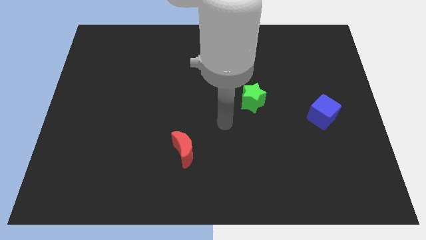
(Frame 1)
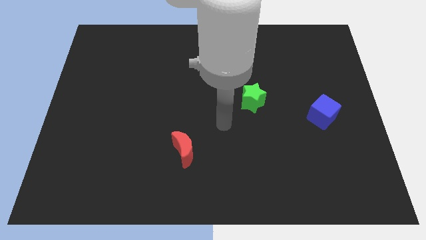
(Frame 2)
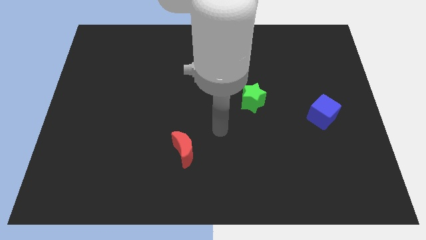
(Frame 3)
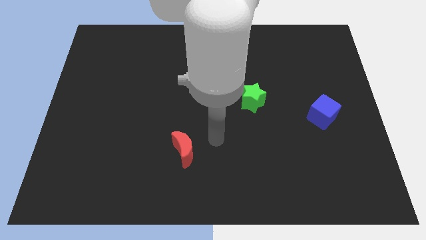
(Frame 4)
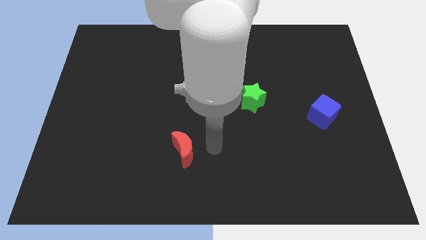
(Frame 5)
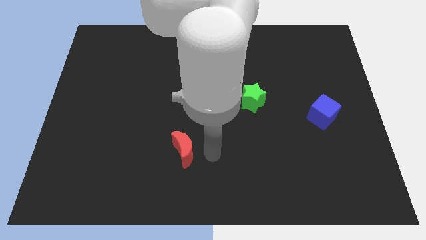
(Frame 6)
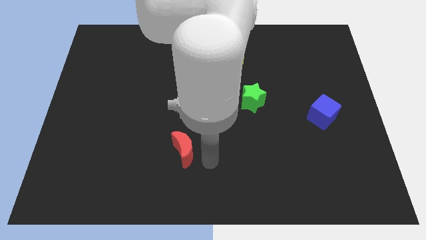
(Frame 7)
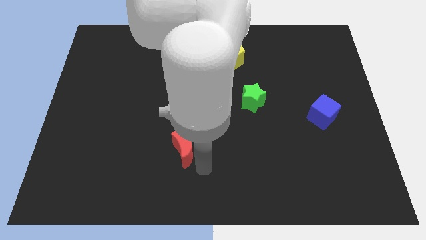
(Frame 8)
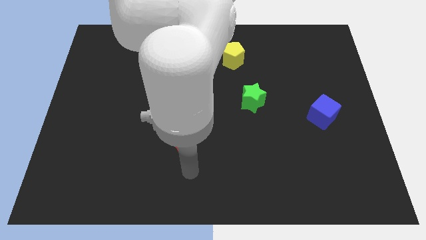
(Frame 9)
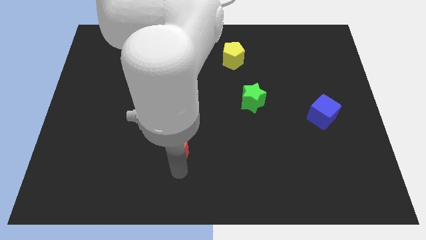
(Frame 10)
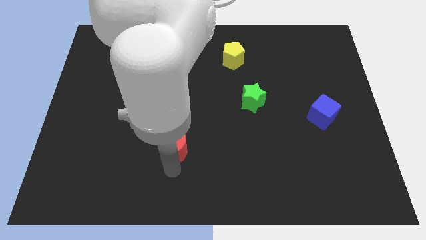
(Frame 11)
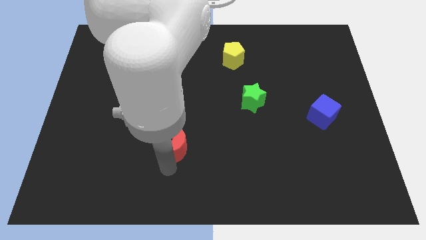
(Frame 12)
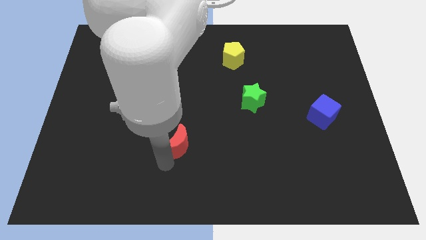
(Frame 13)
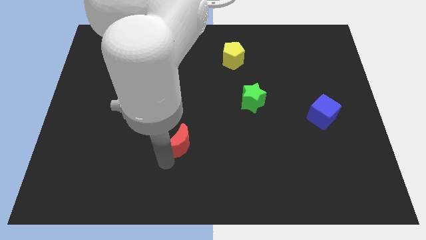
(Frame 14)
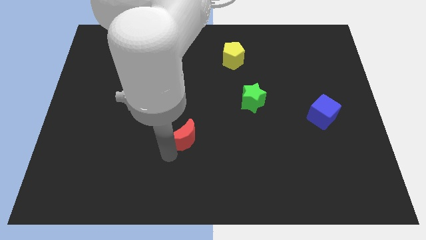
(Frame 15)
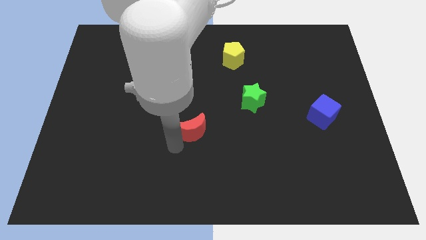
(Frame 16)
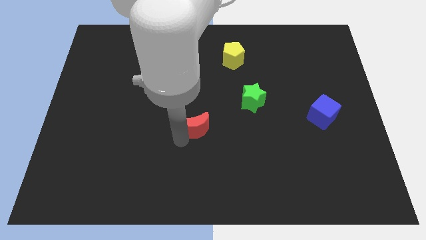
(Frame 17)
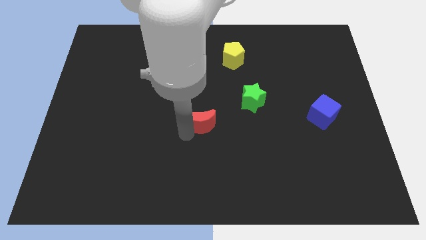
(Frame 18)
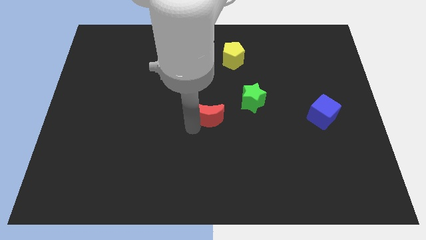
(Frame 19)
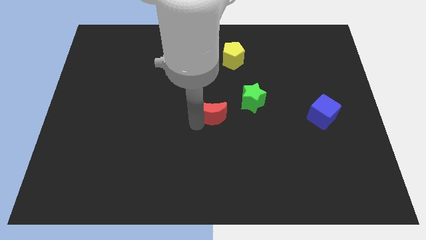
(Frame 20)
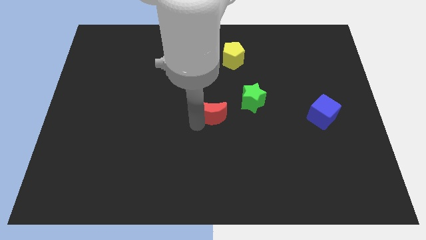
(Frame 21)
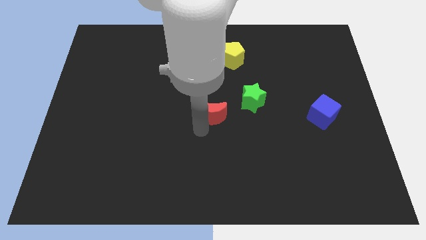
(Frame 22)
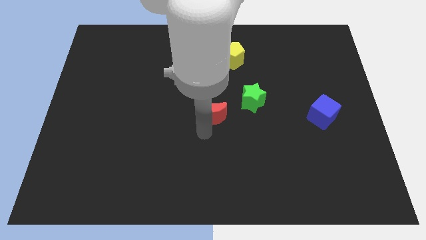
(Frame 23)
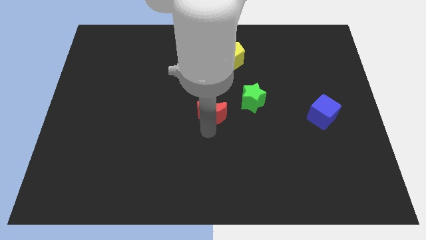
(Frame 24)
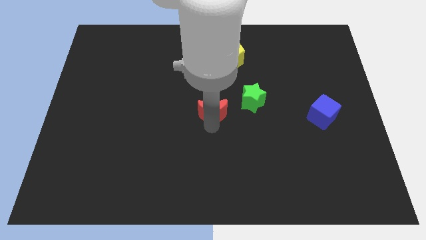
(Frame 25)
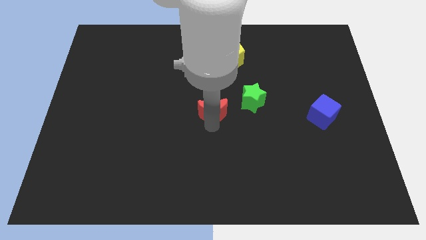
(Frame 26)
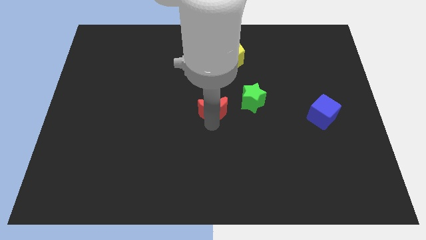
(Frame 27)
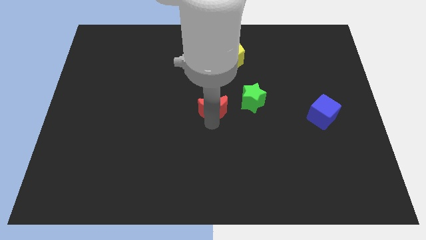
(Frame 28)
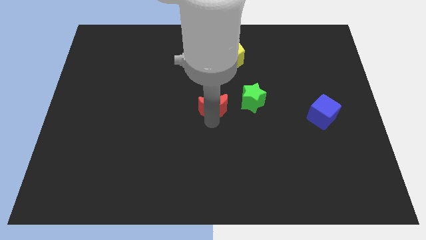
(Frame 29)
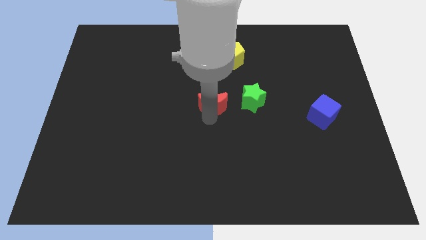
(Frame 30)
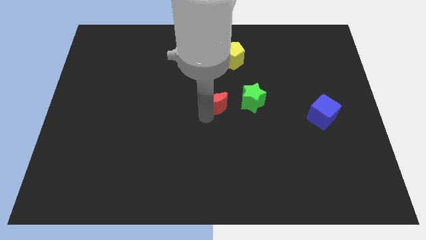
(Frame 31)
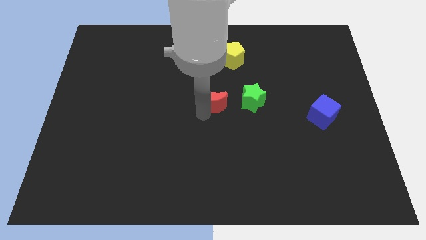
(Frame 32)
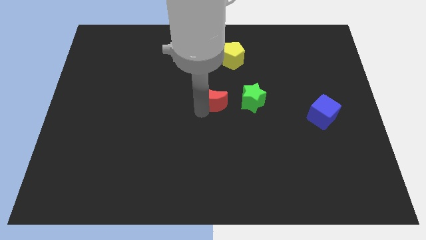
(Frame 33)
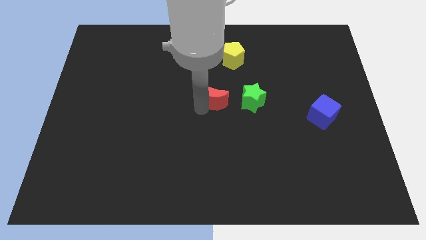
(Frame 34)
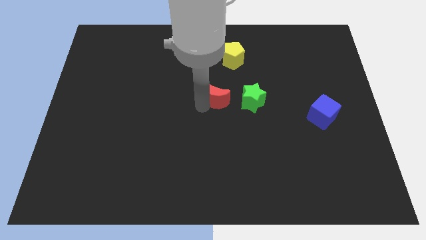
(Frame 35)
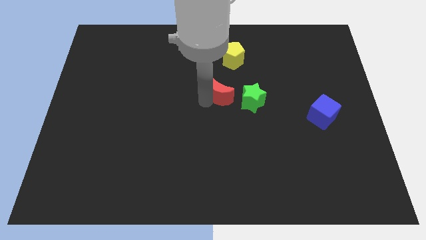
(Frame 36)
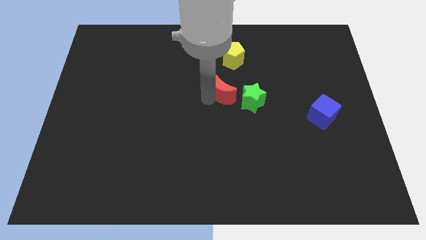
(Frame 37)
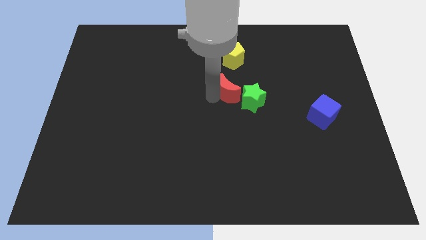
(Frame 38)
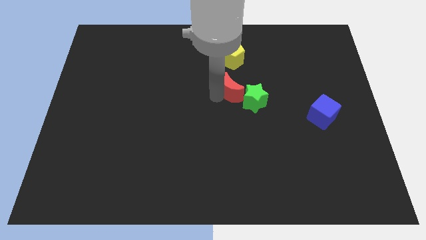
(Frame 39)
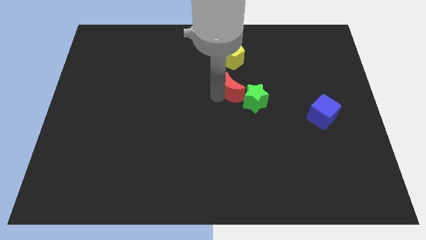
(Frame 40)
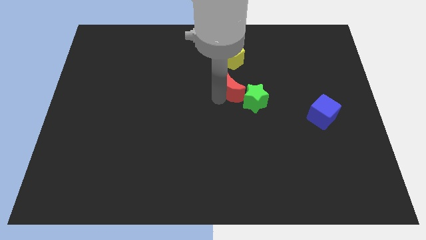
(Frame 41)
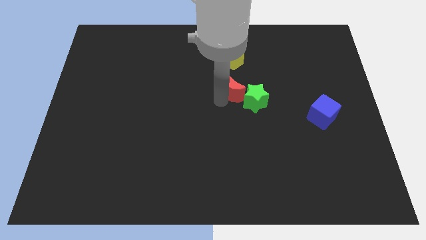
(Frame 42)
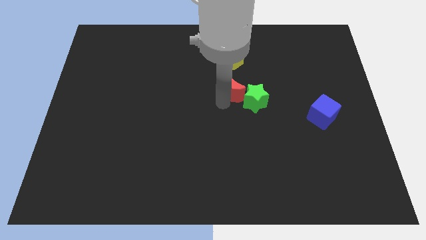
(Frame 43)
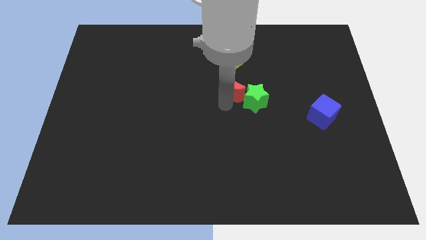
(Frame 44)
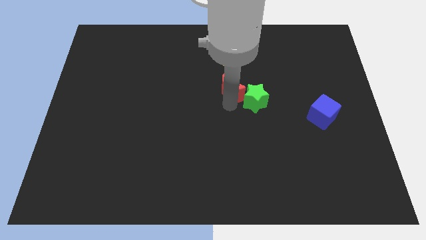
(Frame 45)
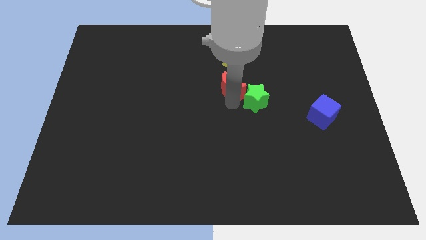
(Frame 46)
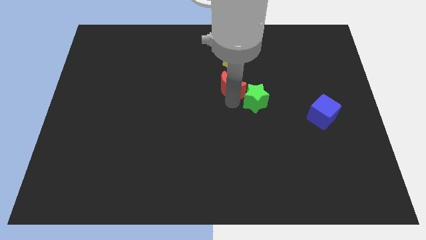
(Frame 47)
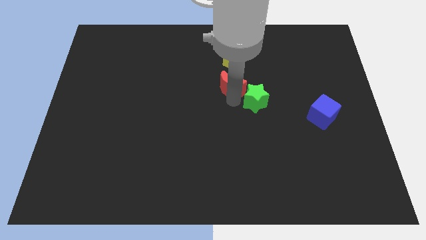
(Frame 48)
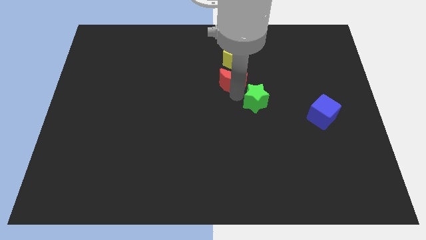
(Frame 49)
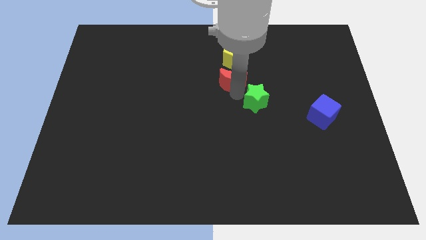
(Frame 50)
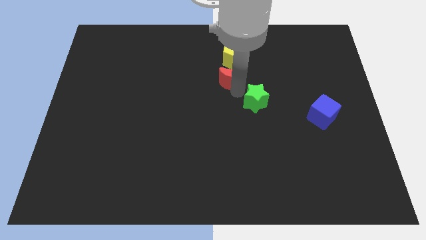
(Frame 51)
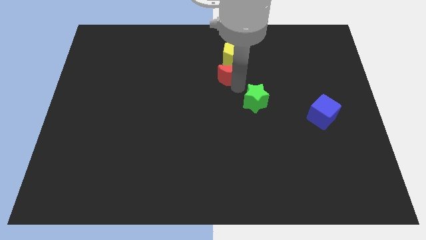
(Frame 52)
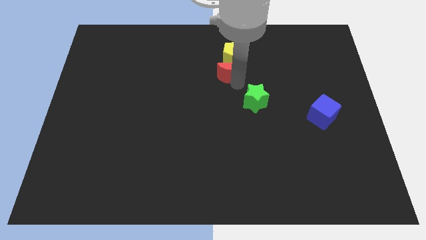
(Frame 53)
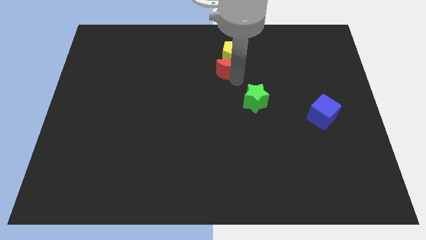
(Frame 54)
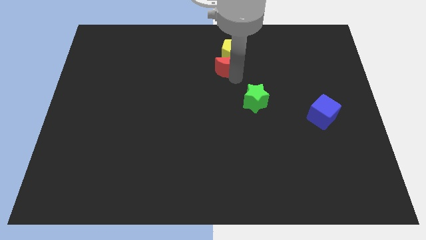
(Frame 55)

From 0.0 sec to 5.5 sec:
slide the red block towards the pentagon

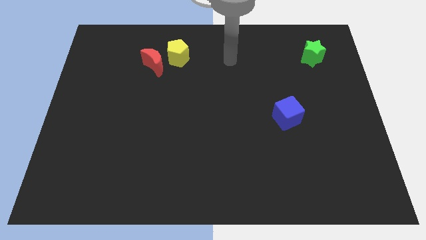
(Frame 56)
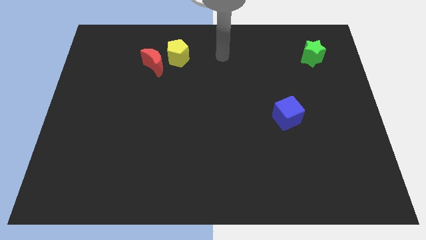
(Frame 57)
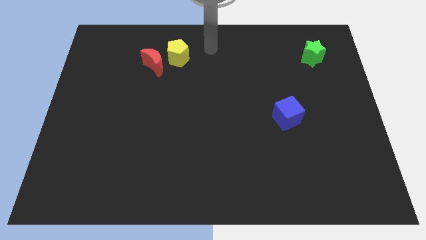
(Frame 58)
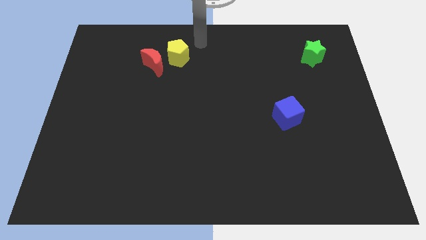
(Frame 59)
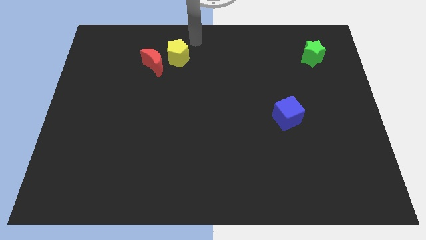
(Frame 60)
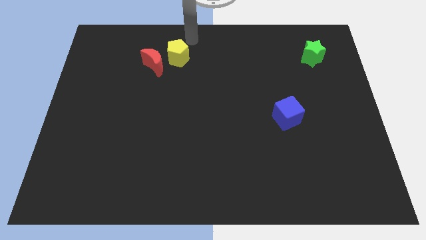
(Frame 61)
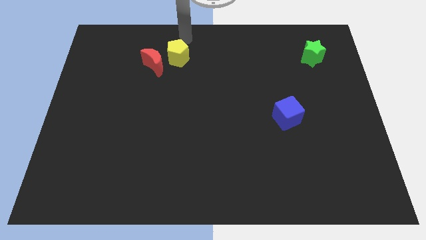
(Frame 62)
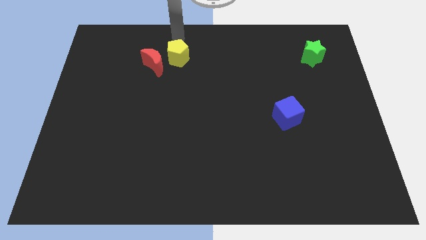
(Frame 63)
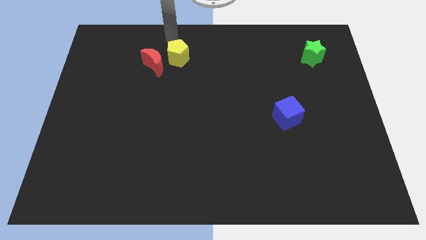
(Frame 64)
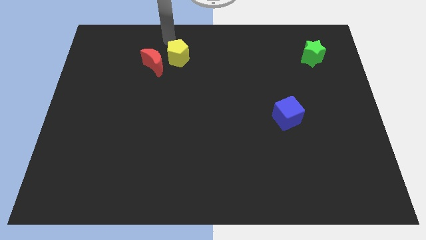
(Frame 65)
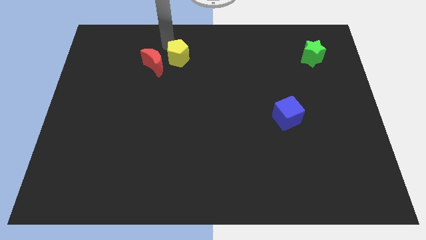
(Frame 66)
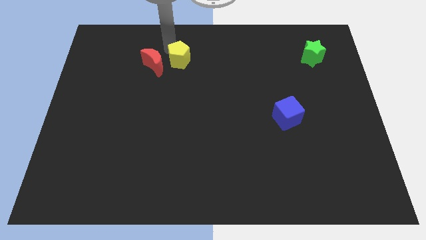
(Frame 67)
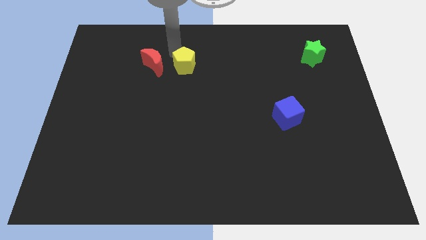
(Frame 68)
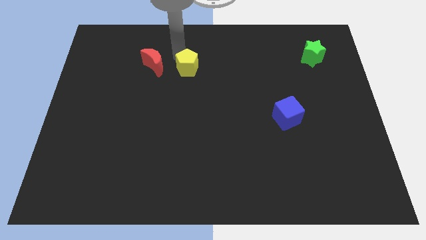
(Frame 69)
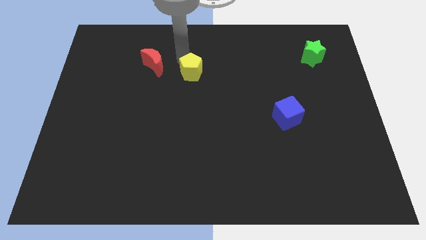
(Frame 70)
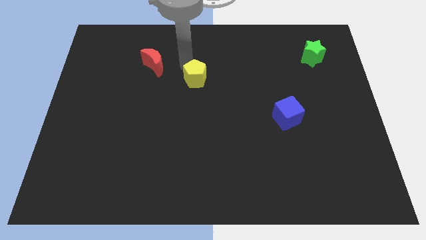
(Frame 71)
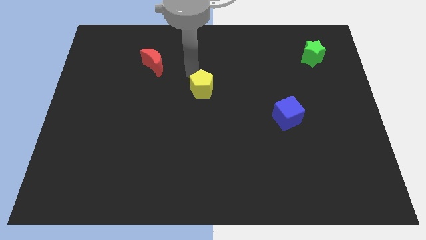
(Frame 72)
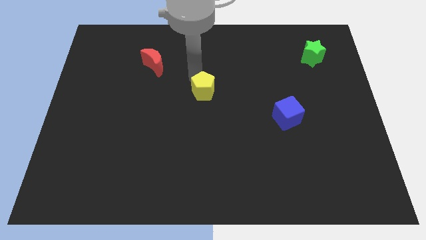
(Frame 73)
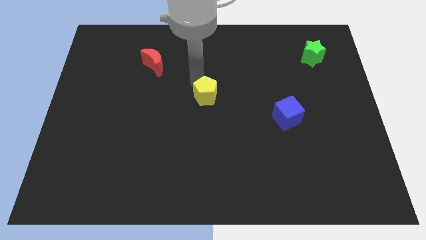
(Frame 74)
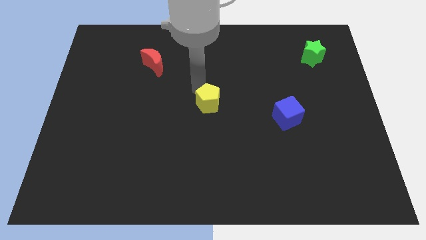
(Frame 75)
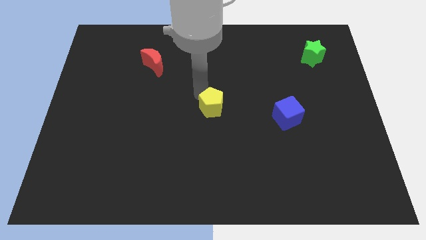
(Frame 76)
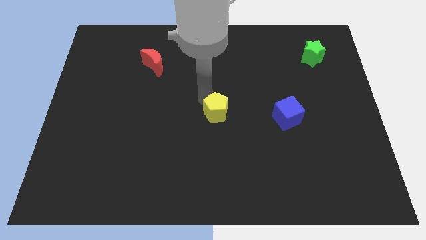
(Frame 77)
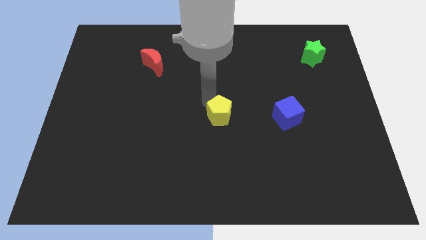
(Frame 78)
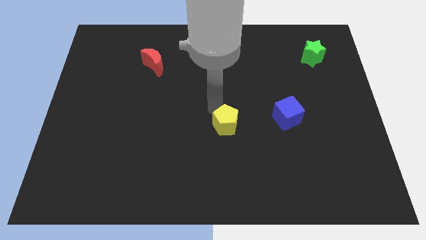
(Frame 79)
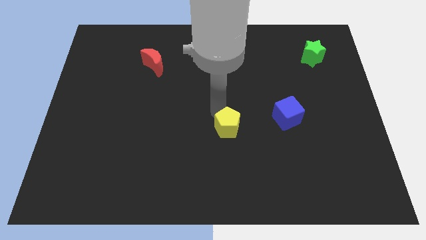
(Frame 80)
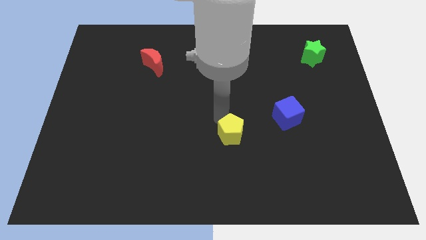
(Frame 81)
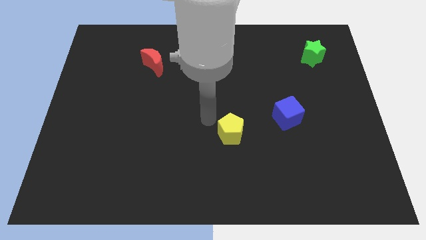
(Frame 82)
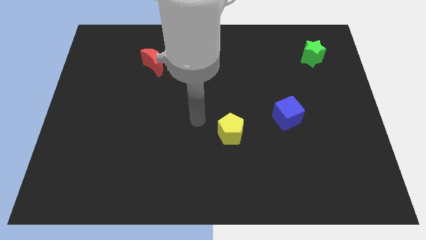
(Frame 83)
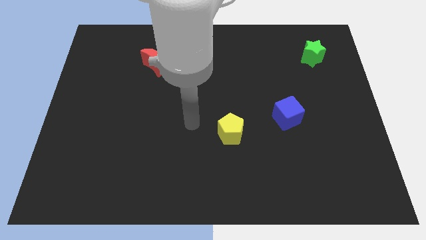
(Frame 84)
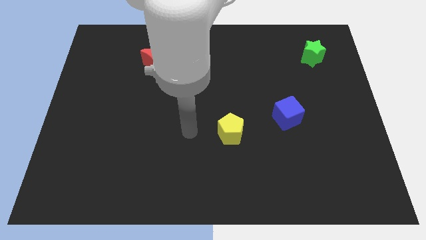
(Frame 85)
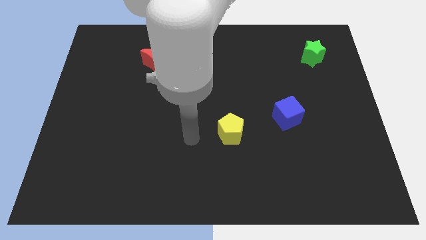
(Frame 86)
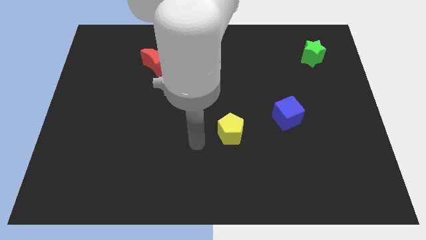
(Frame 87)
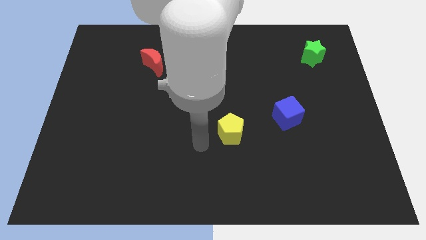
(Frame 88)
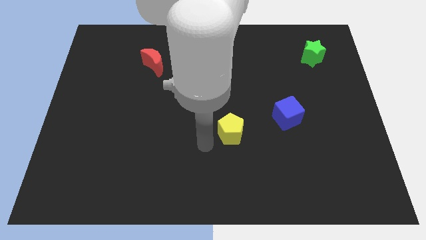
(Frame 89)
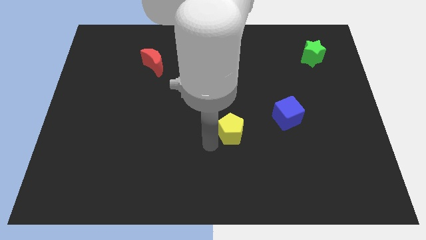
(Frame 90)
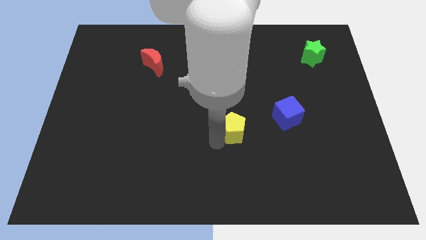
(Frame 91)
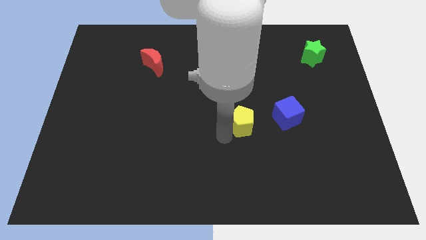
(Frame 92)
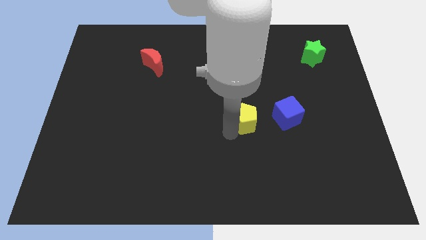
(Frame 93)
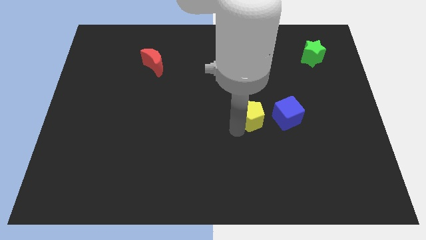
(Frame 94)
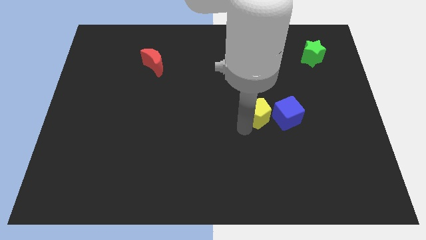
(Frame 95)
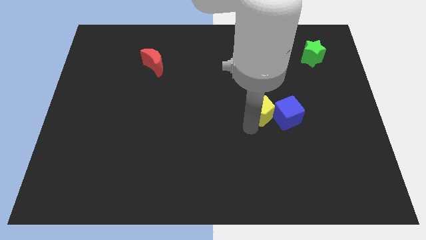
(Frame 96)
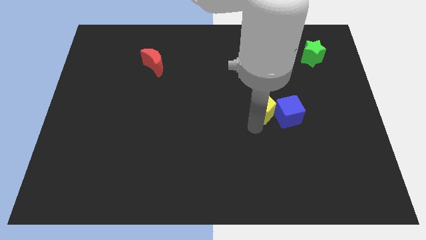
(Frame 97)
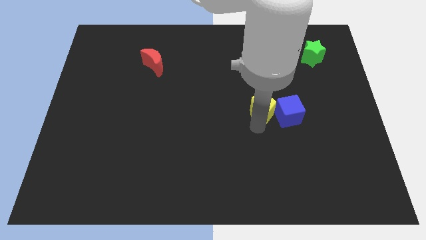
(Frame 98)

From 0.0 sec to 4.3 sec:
slide the yellow pentagon towards the blue block
